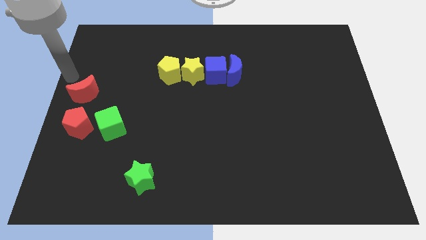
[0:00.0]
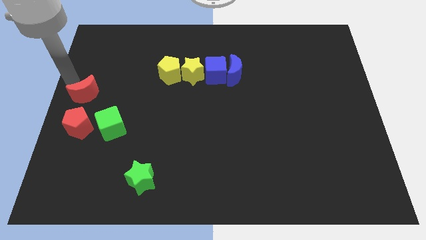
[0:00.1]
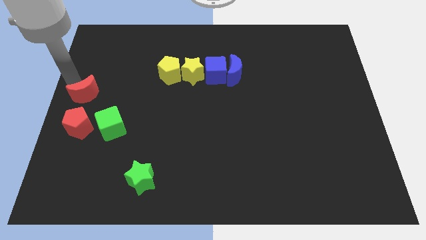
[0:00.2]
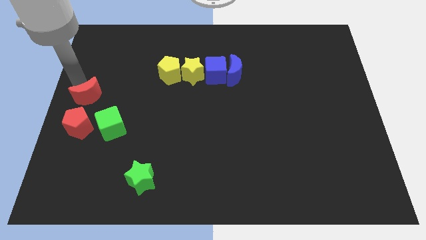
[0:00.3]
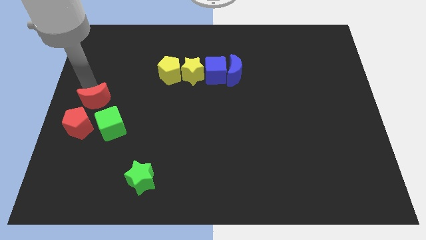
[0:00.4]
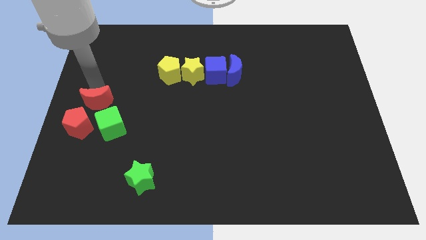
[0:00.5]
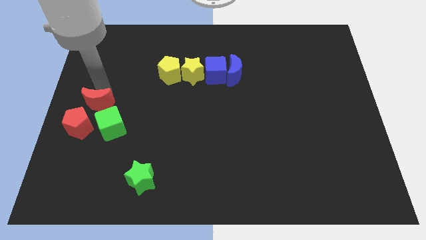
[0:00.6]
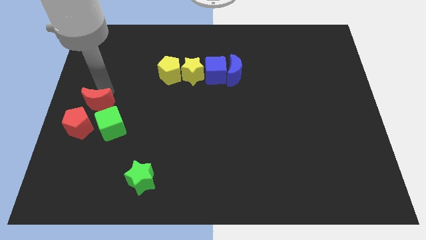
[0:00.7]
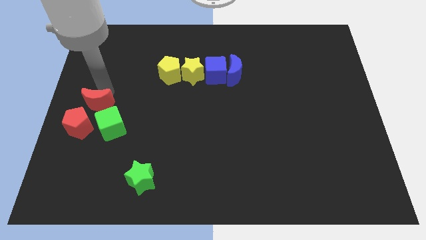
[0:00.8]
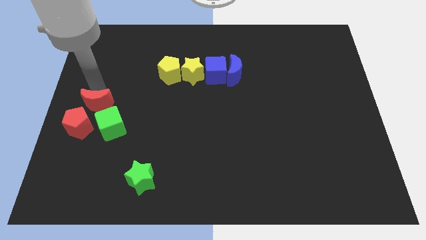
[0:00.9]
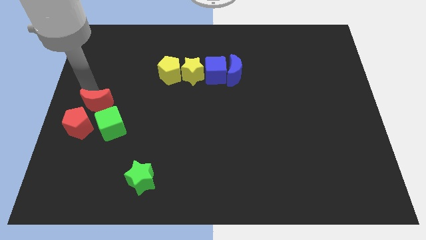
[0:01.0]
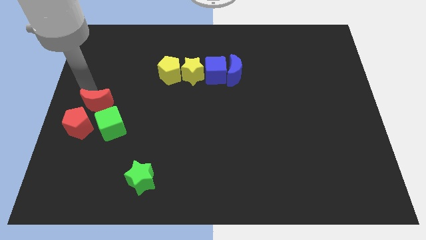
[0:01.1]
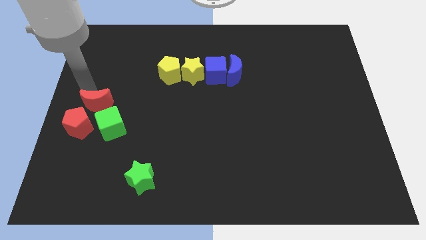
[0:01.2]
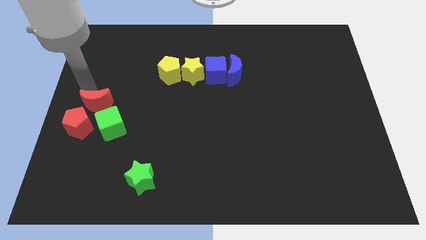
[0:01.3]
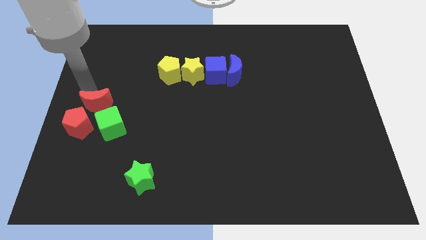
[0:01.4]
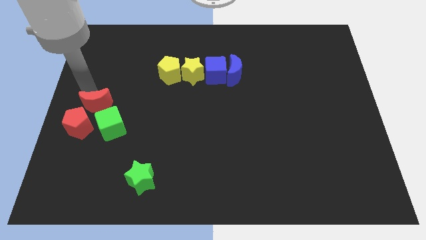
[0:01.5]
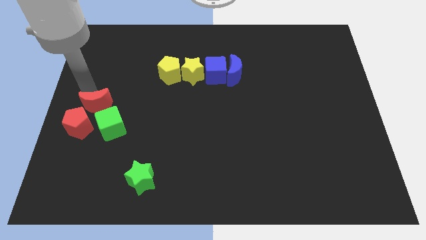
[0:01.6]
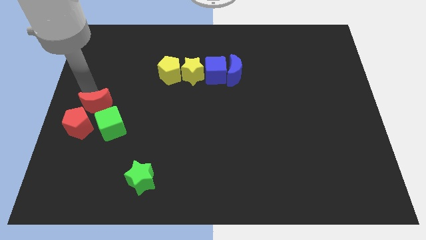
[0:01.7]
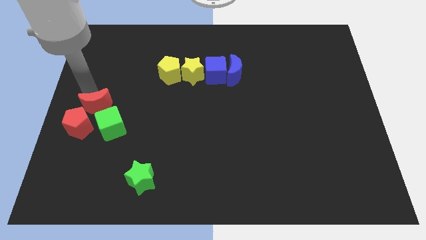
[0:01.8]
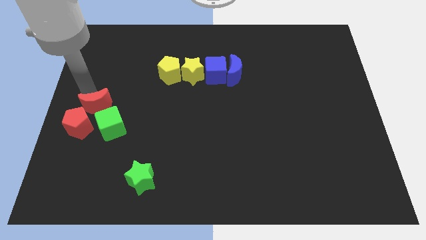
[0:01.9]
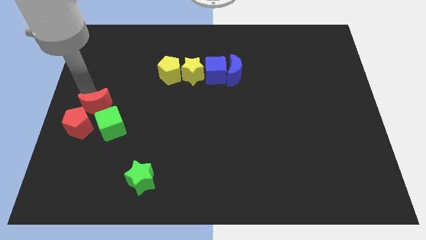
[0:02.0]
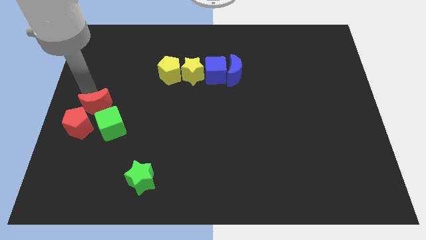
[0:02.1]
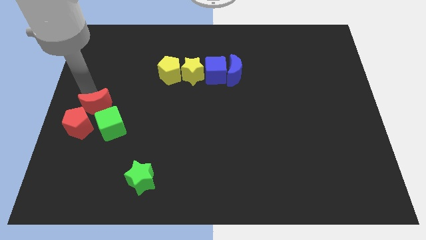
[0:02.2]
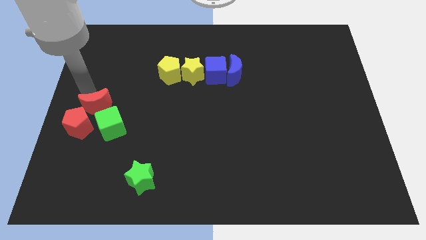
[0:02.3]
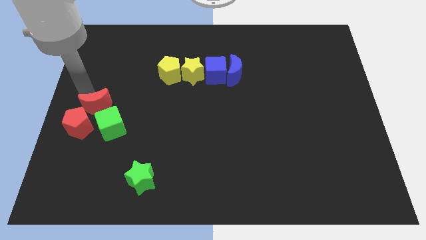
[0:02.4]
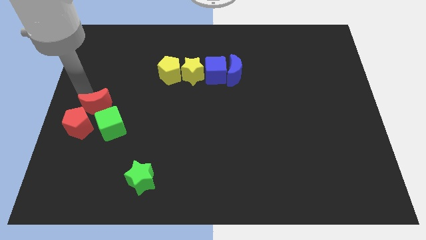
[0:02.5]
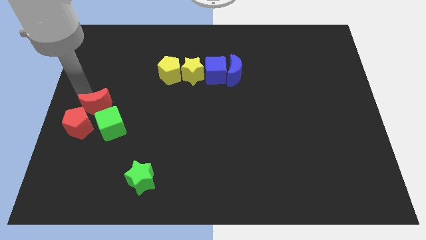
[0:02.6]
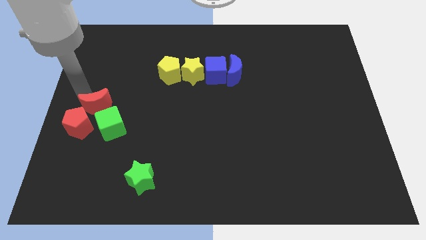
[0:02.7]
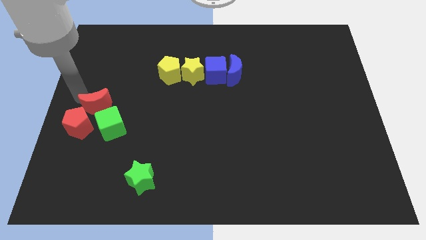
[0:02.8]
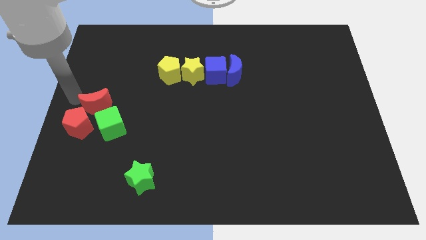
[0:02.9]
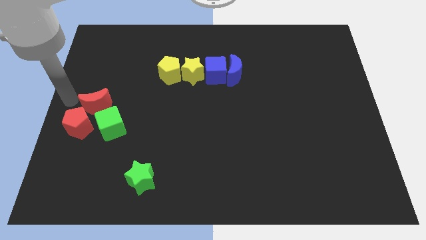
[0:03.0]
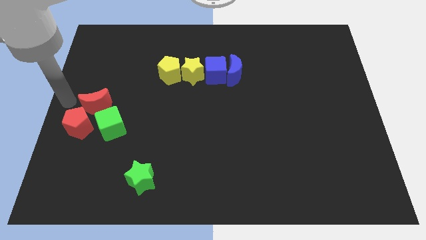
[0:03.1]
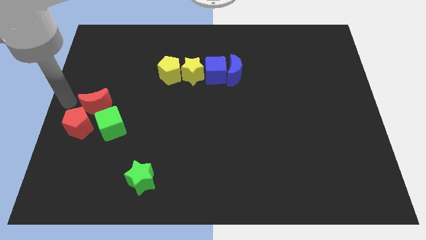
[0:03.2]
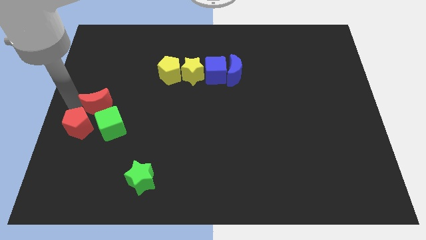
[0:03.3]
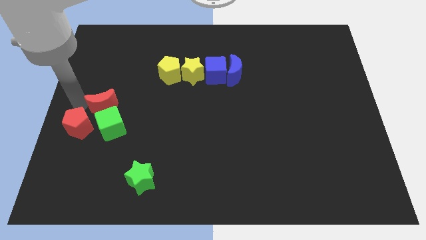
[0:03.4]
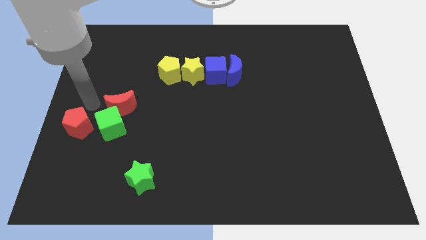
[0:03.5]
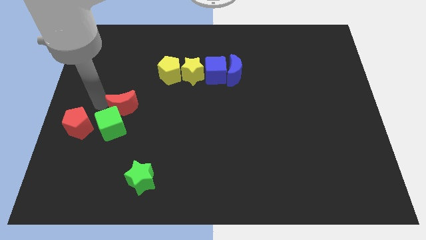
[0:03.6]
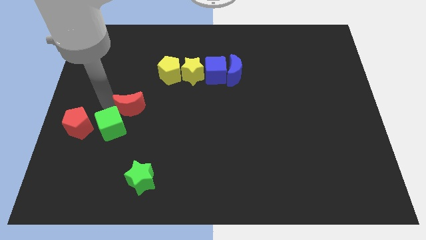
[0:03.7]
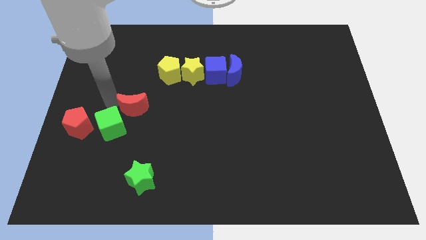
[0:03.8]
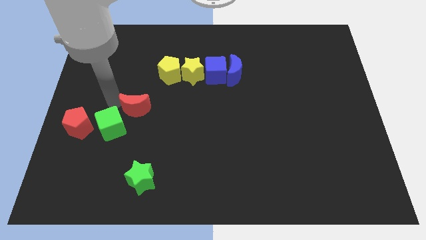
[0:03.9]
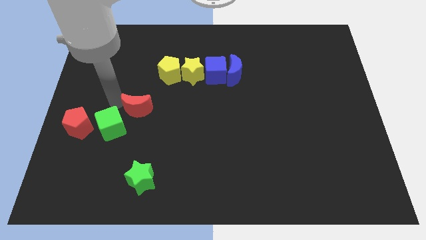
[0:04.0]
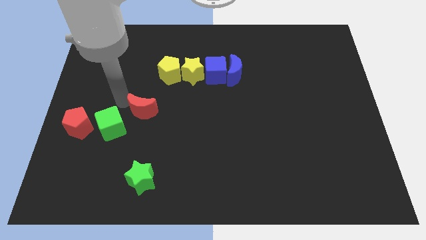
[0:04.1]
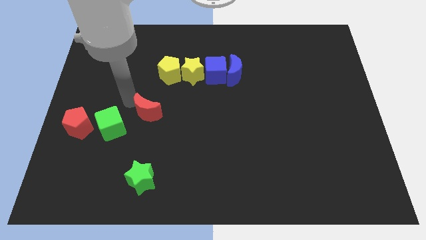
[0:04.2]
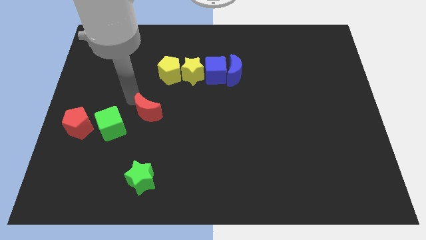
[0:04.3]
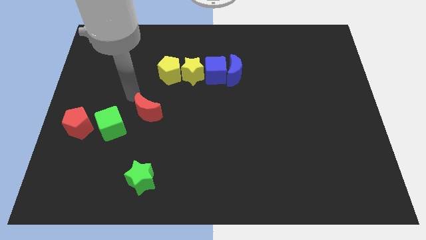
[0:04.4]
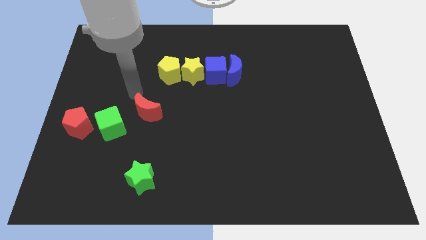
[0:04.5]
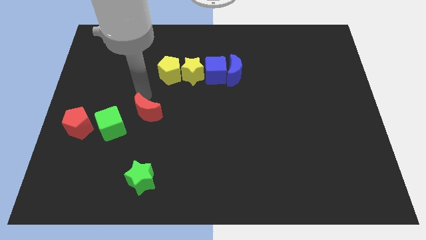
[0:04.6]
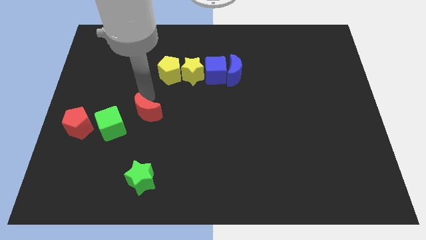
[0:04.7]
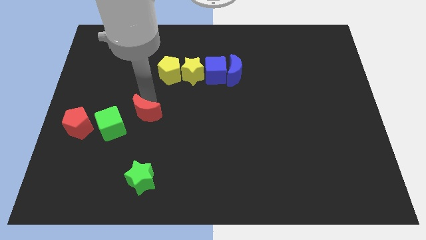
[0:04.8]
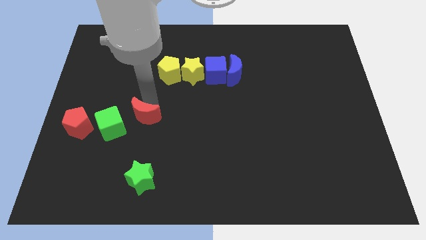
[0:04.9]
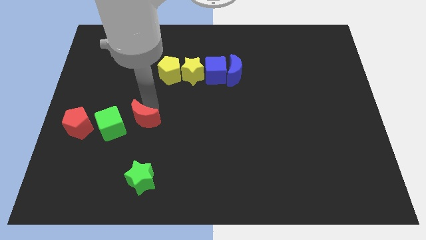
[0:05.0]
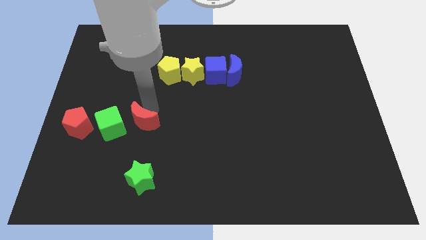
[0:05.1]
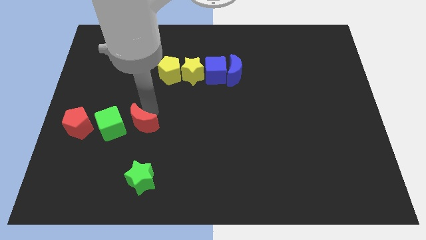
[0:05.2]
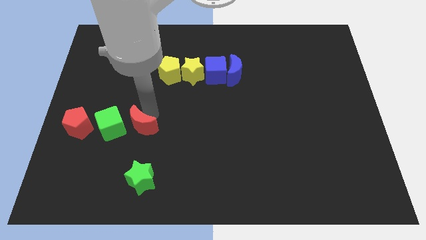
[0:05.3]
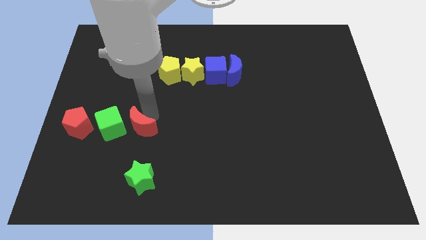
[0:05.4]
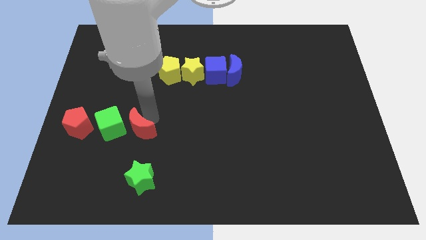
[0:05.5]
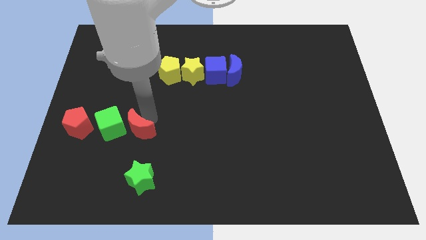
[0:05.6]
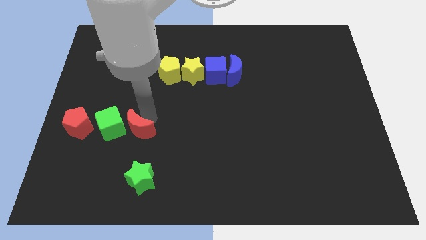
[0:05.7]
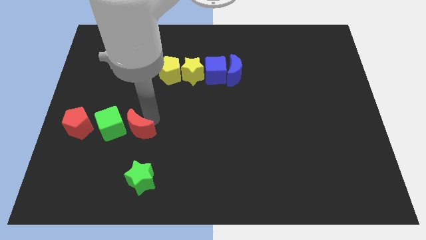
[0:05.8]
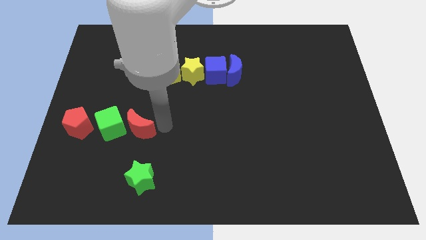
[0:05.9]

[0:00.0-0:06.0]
place the red crescent to the right side of the green cube

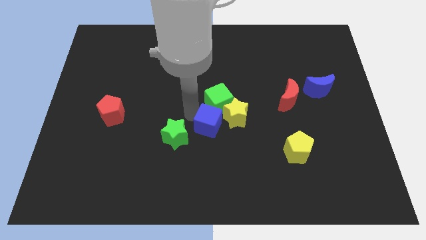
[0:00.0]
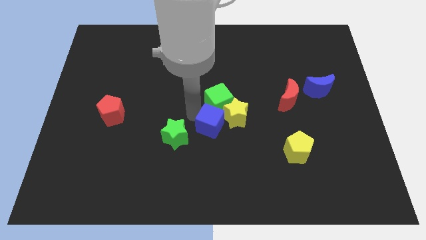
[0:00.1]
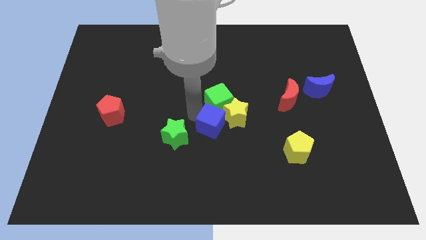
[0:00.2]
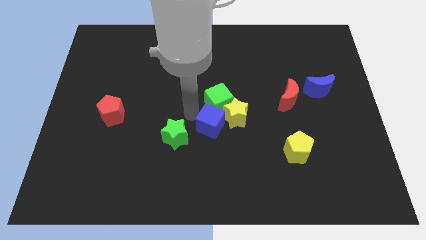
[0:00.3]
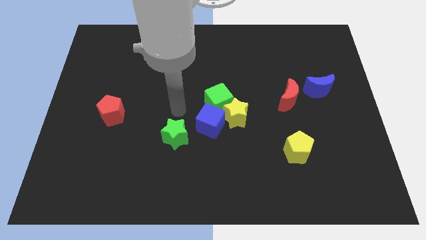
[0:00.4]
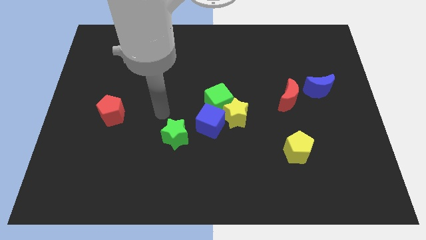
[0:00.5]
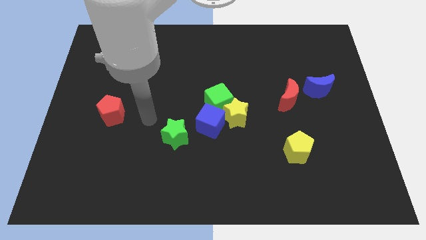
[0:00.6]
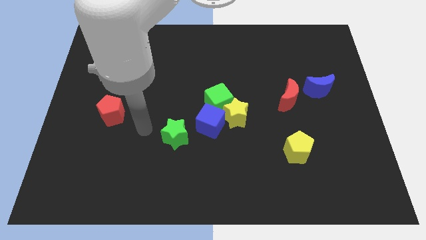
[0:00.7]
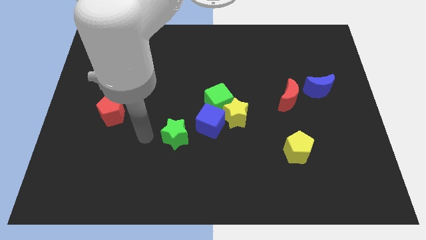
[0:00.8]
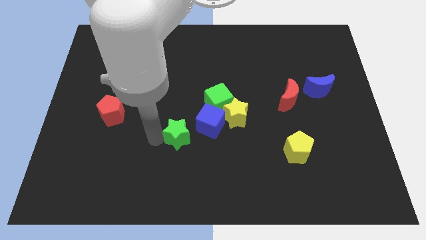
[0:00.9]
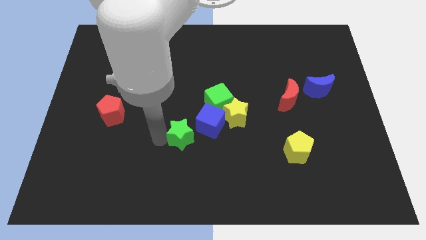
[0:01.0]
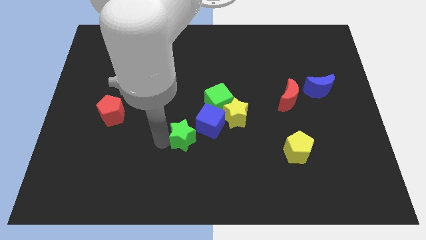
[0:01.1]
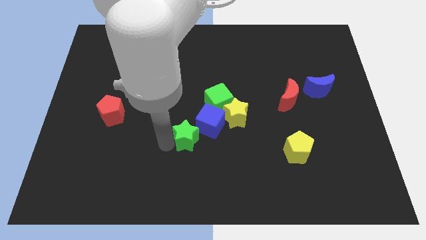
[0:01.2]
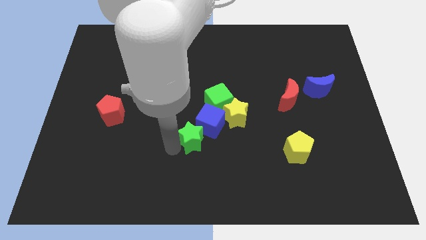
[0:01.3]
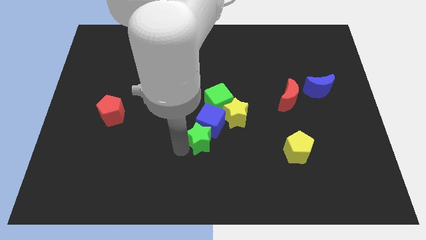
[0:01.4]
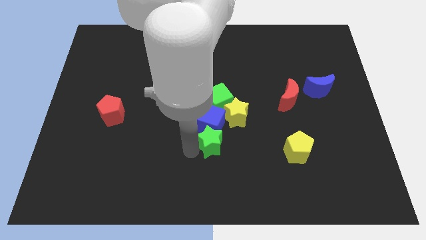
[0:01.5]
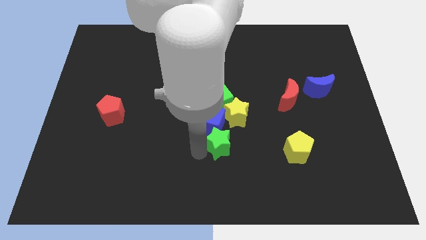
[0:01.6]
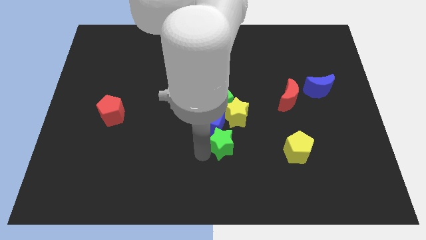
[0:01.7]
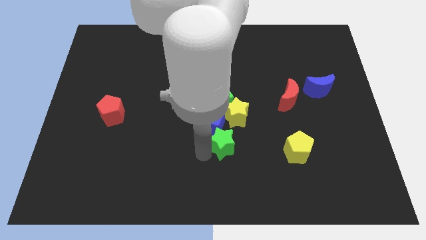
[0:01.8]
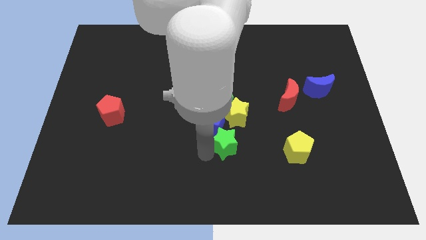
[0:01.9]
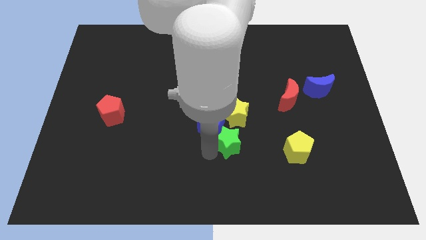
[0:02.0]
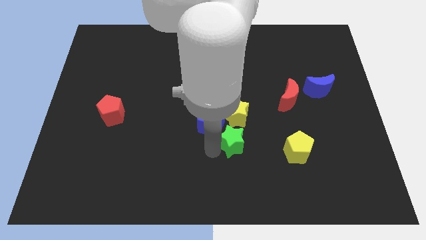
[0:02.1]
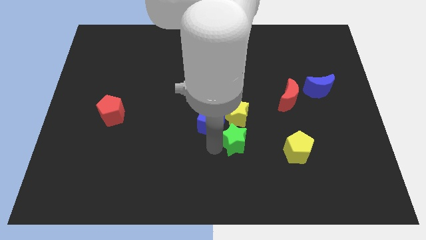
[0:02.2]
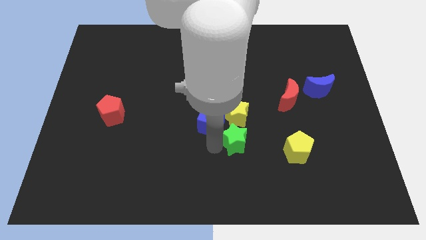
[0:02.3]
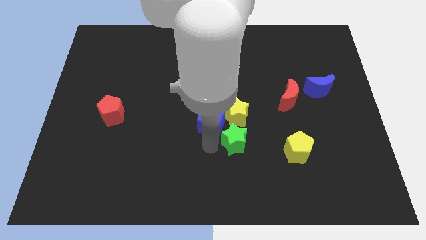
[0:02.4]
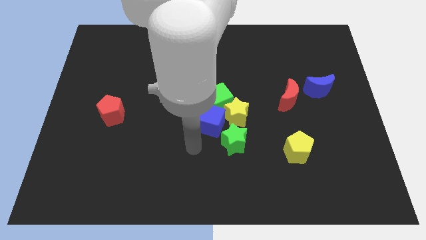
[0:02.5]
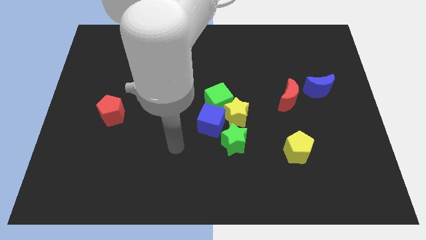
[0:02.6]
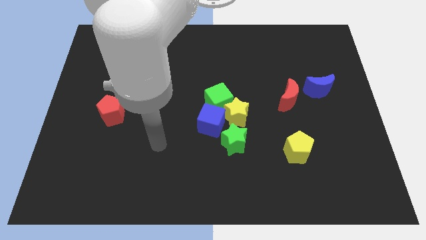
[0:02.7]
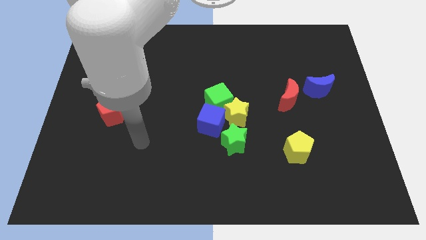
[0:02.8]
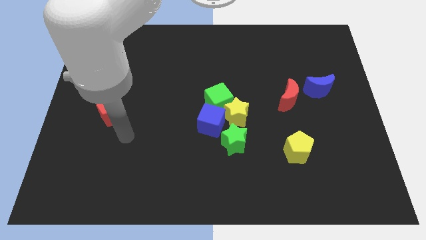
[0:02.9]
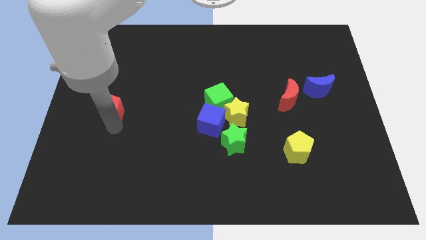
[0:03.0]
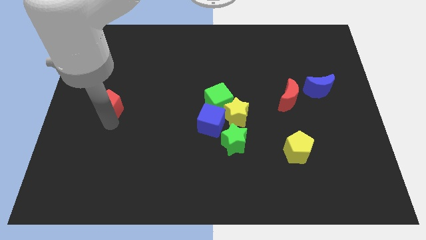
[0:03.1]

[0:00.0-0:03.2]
put green star vertically below the yellow star
